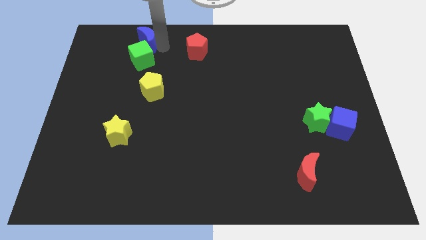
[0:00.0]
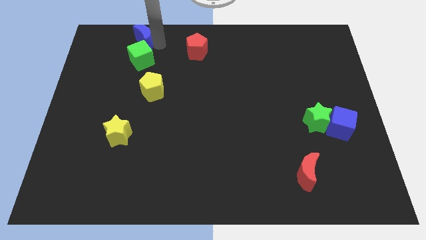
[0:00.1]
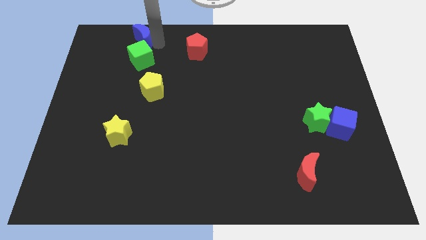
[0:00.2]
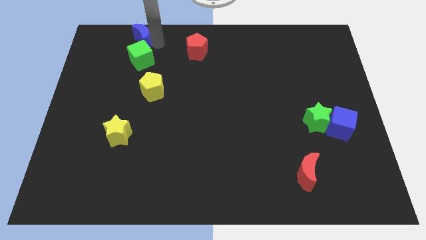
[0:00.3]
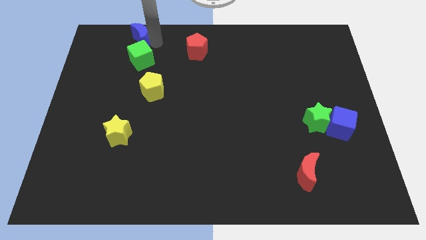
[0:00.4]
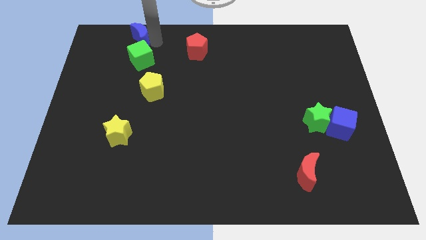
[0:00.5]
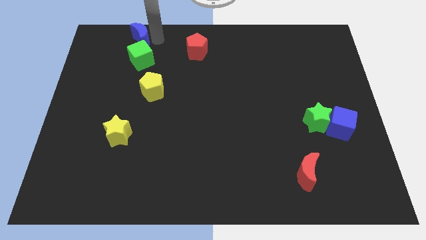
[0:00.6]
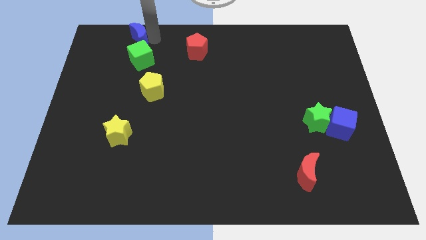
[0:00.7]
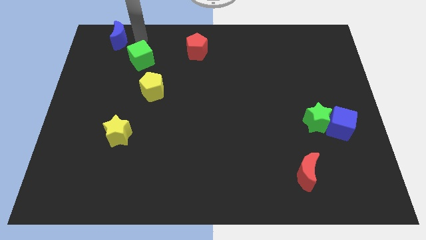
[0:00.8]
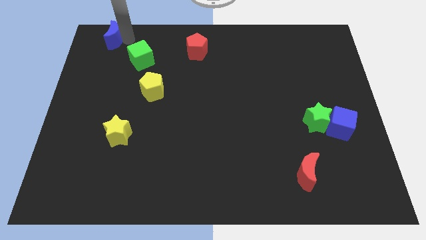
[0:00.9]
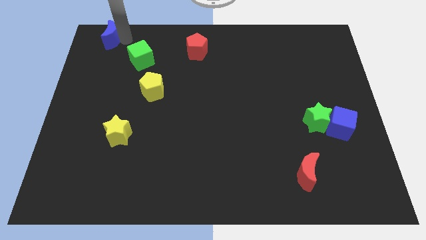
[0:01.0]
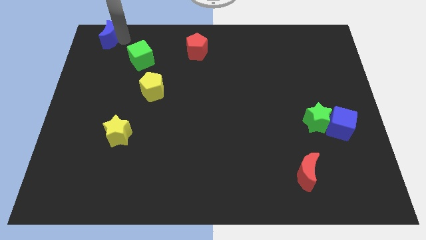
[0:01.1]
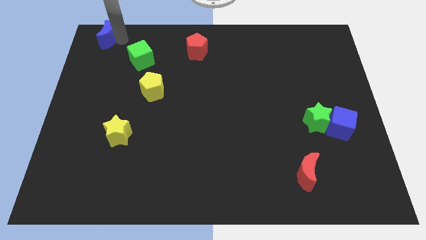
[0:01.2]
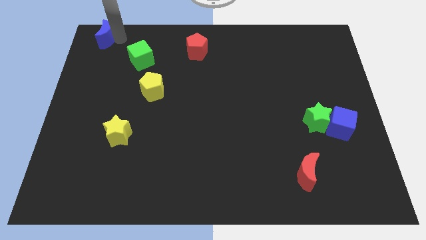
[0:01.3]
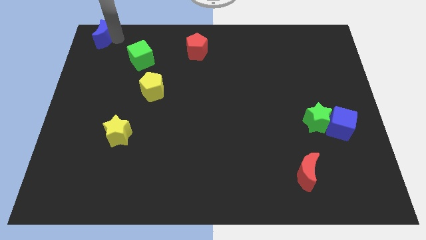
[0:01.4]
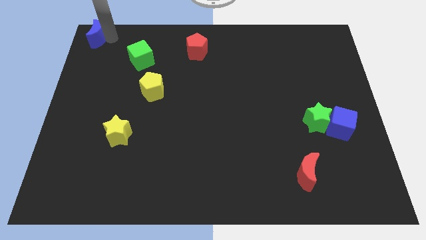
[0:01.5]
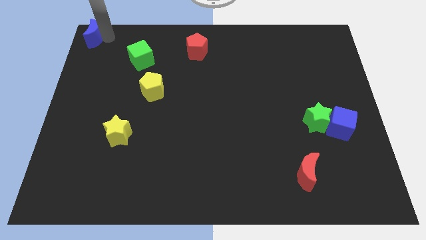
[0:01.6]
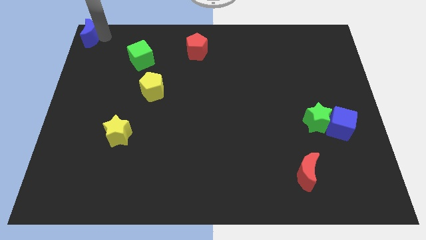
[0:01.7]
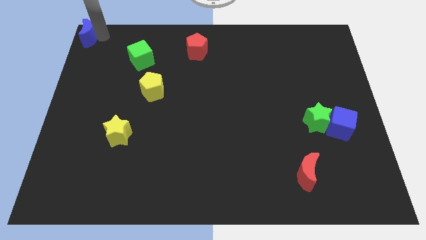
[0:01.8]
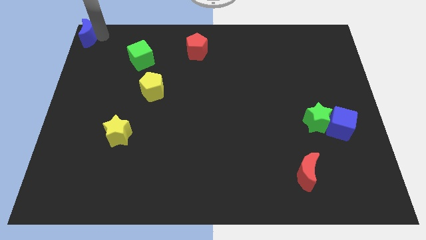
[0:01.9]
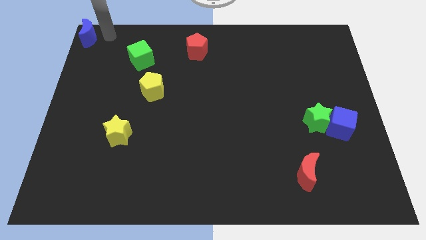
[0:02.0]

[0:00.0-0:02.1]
move the blue crescent towards the top left corner of the board

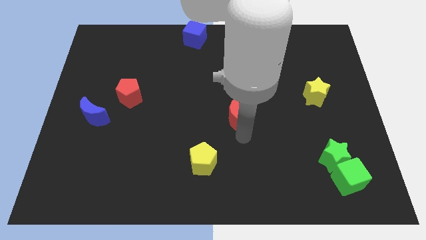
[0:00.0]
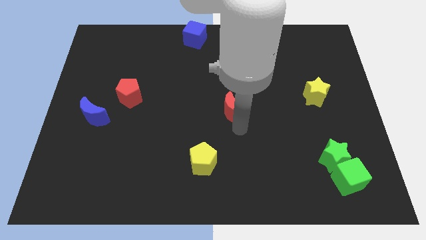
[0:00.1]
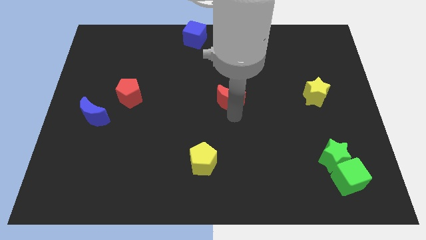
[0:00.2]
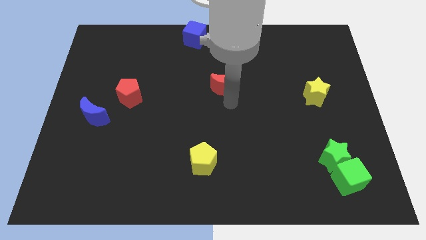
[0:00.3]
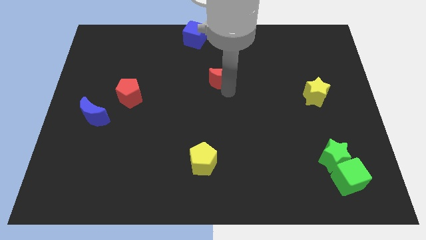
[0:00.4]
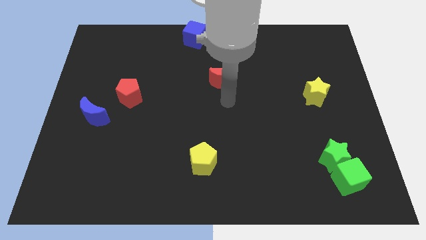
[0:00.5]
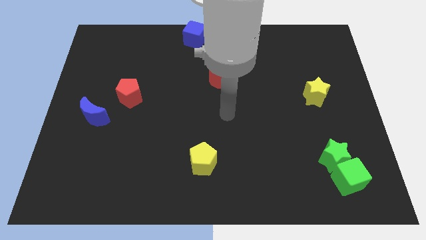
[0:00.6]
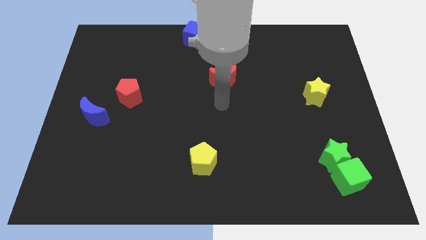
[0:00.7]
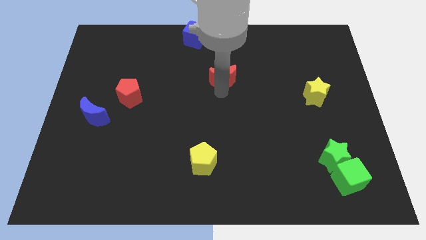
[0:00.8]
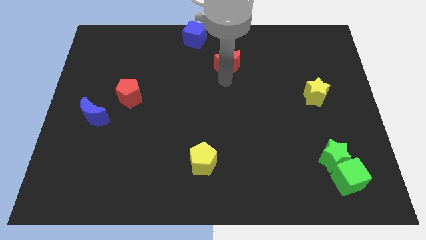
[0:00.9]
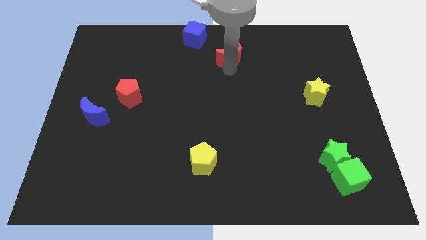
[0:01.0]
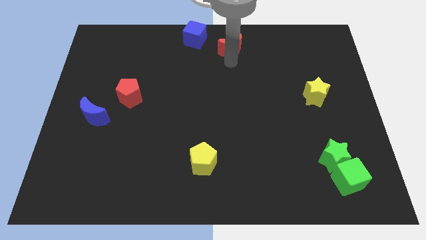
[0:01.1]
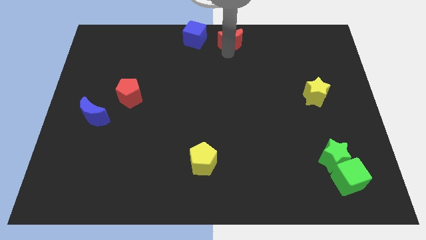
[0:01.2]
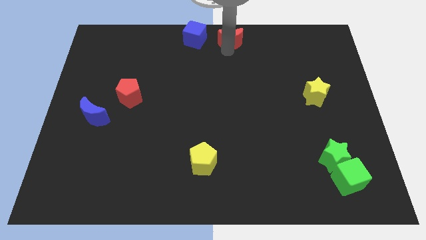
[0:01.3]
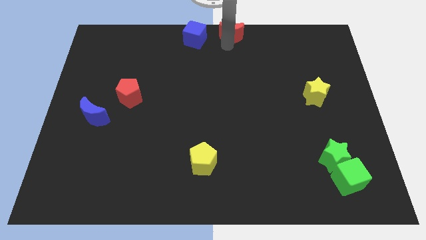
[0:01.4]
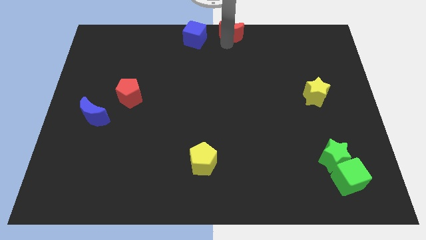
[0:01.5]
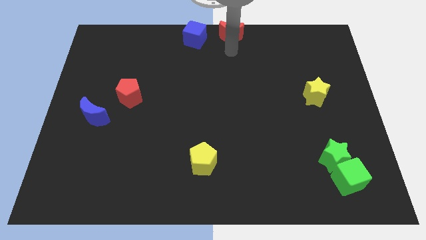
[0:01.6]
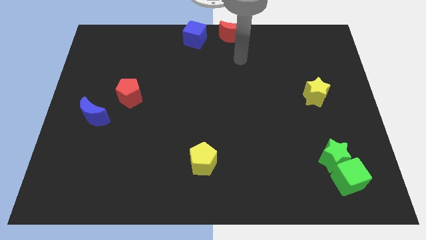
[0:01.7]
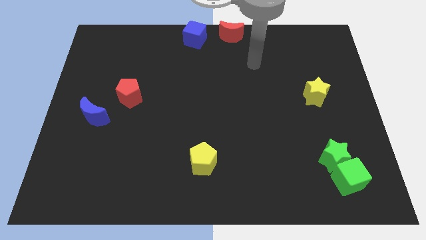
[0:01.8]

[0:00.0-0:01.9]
move red crescent to the right of the blue block

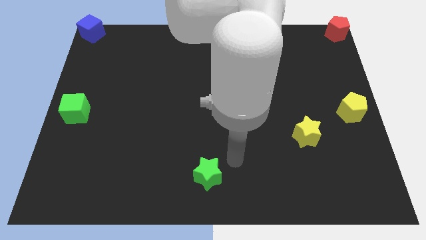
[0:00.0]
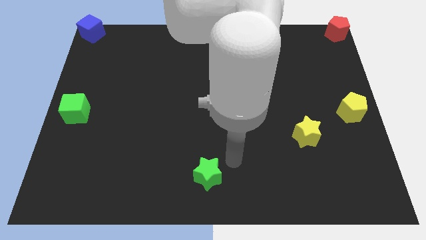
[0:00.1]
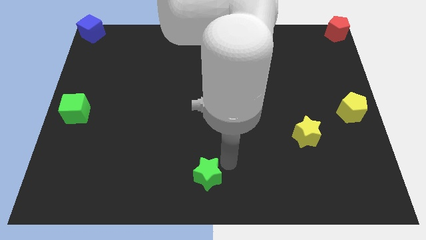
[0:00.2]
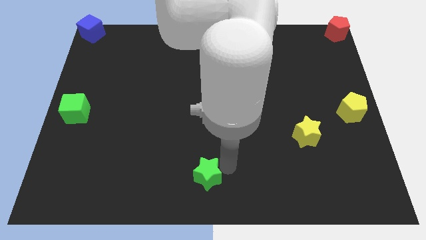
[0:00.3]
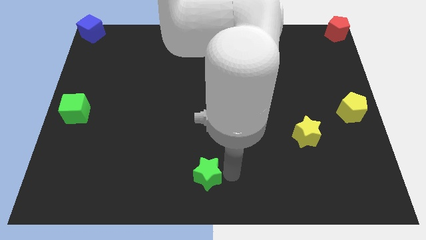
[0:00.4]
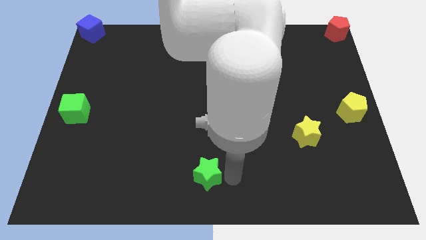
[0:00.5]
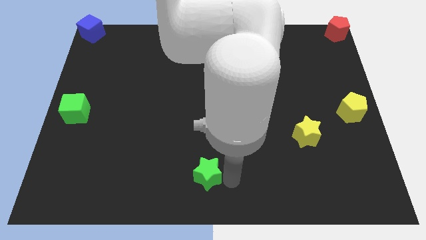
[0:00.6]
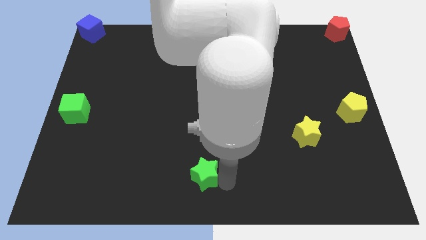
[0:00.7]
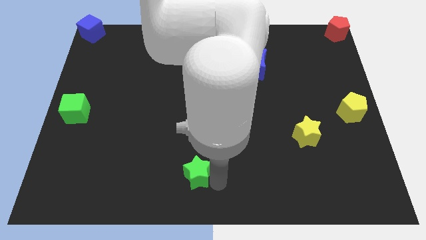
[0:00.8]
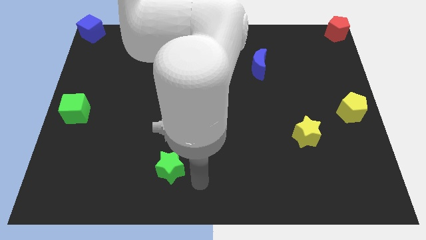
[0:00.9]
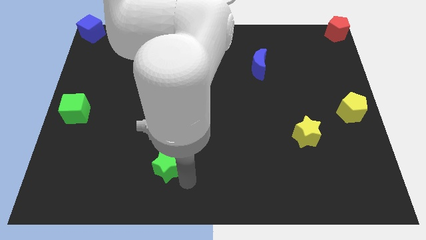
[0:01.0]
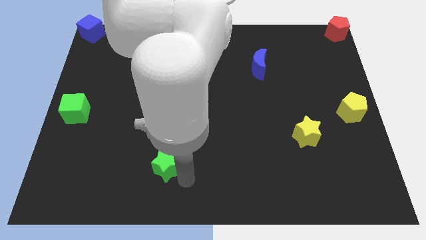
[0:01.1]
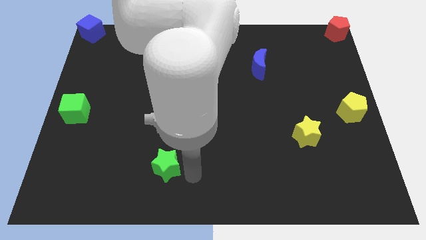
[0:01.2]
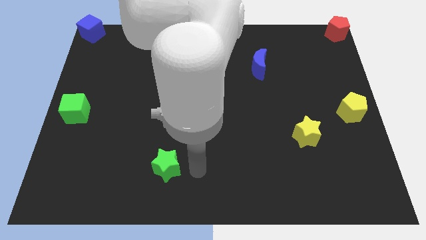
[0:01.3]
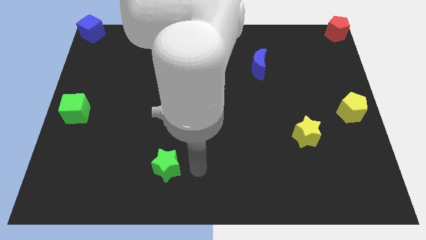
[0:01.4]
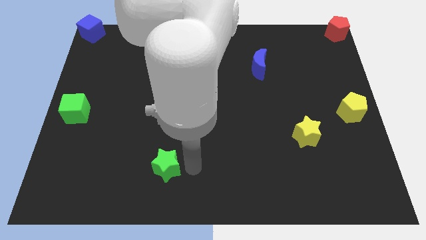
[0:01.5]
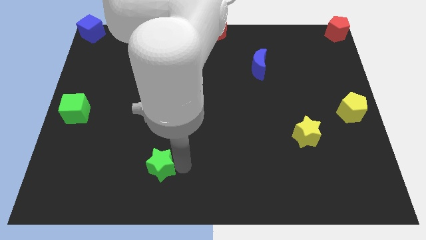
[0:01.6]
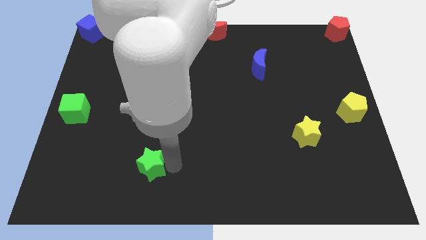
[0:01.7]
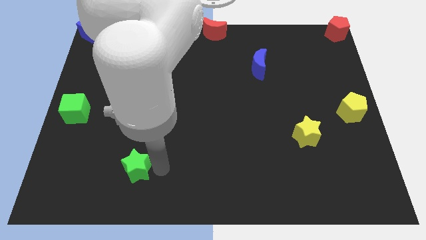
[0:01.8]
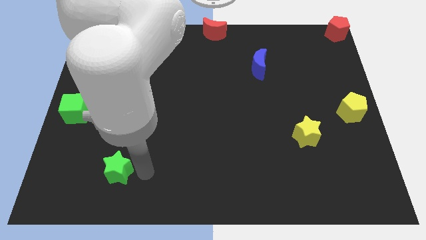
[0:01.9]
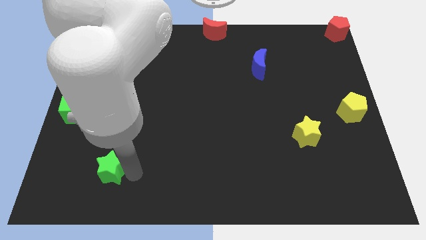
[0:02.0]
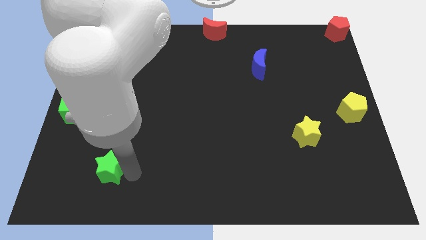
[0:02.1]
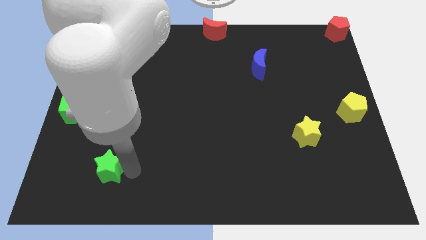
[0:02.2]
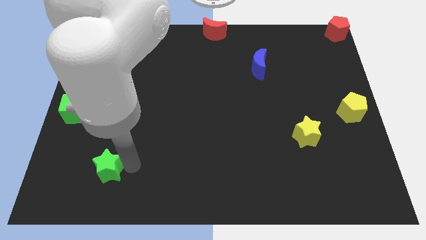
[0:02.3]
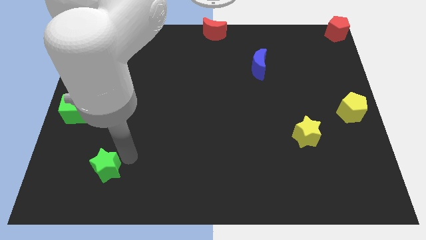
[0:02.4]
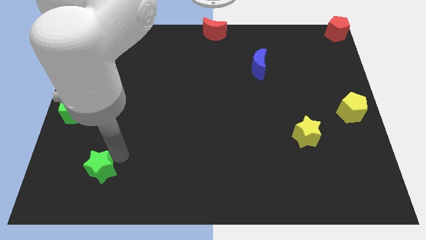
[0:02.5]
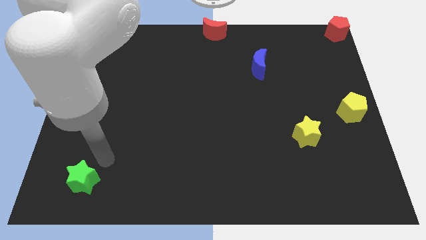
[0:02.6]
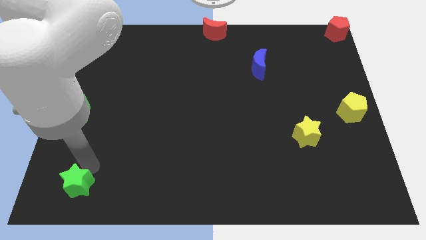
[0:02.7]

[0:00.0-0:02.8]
place the green star to left bottom corner of the board

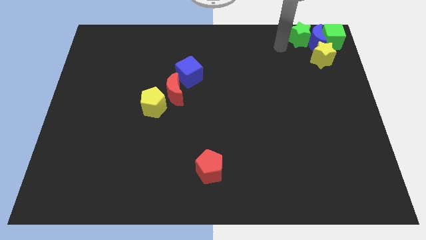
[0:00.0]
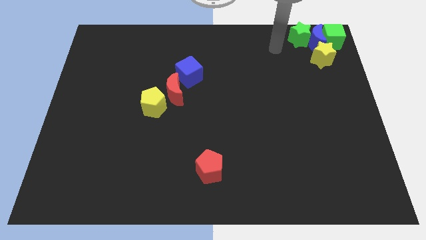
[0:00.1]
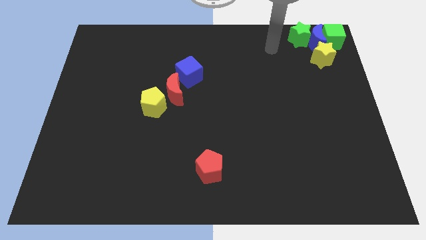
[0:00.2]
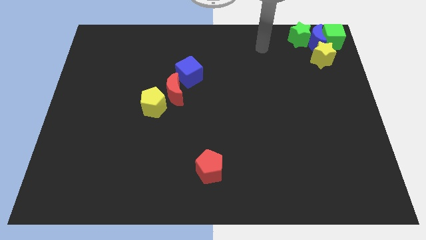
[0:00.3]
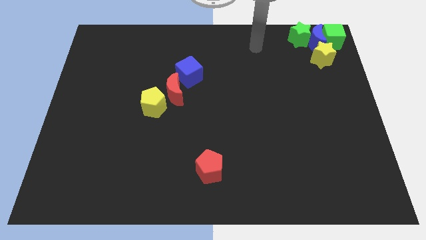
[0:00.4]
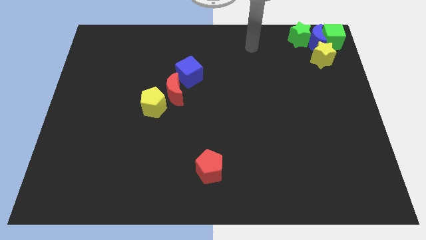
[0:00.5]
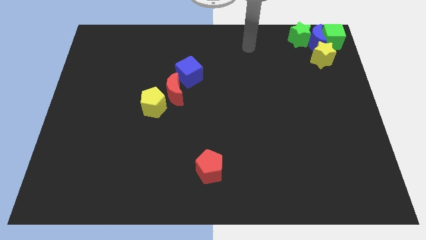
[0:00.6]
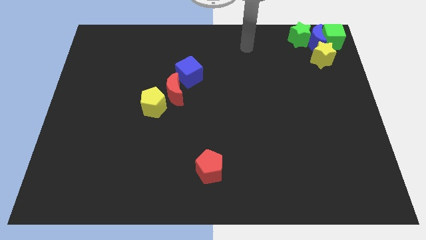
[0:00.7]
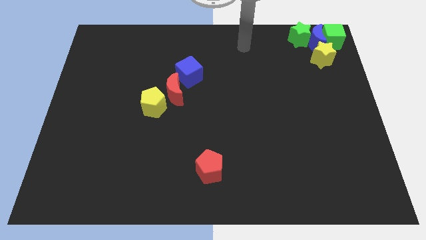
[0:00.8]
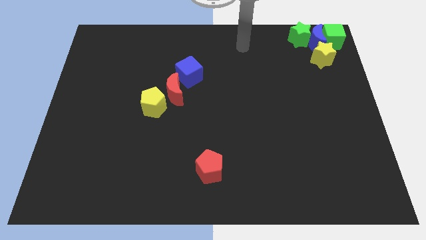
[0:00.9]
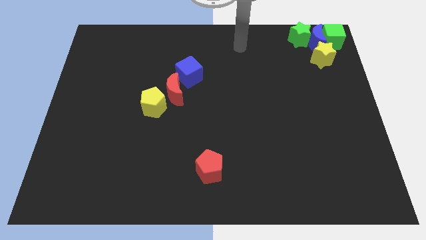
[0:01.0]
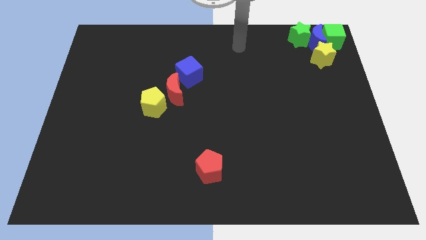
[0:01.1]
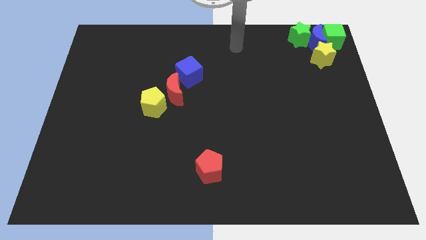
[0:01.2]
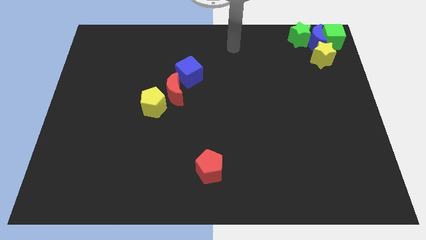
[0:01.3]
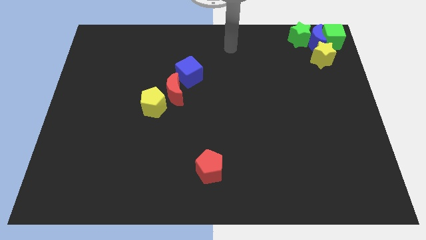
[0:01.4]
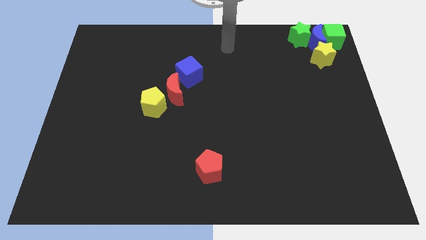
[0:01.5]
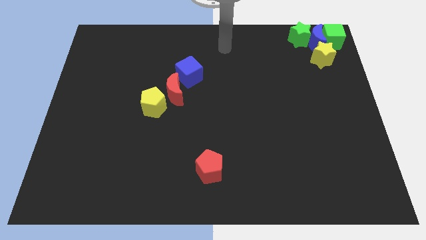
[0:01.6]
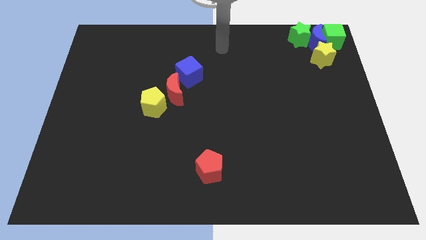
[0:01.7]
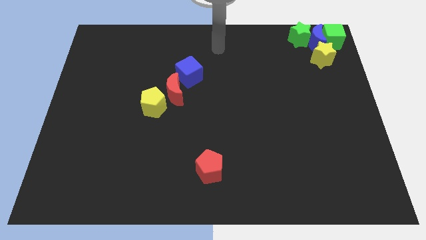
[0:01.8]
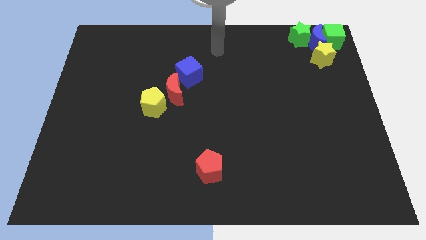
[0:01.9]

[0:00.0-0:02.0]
move the arm away from the green star
